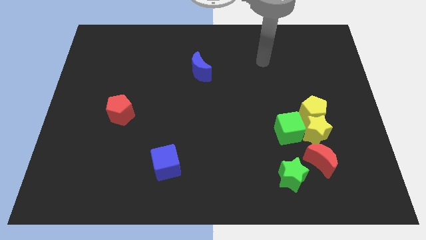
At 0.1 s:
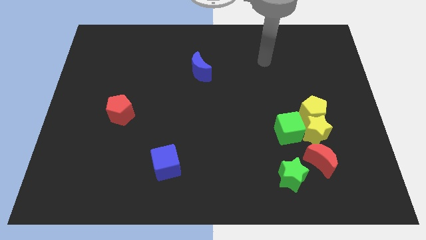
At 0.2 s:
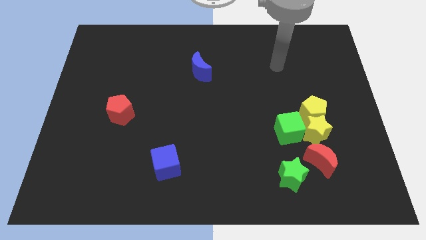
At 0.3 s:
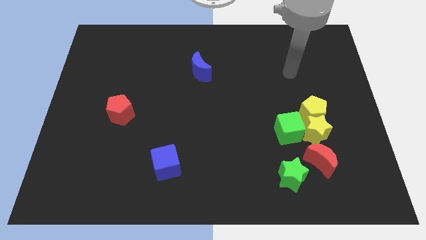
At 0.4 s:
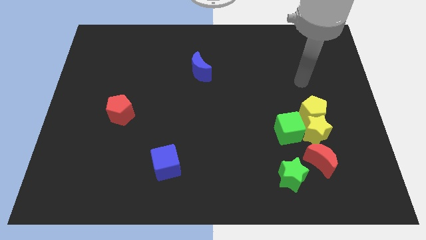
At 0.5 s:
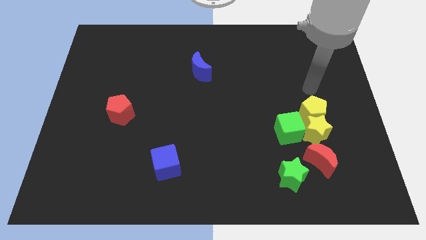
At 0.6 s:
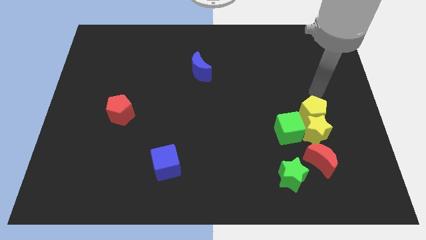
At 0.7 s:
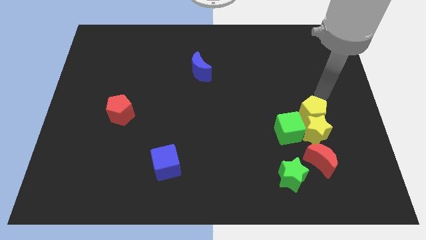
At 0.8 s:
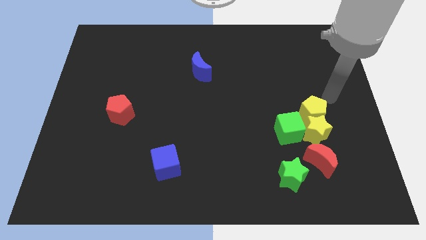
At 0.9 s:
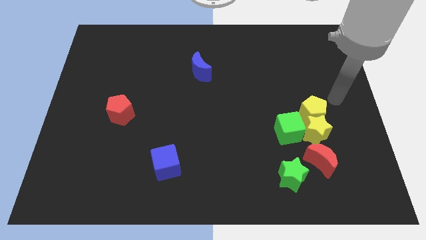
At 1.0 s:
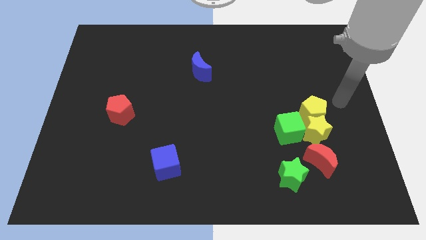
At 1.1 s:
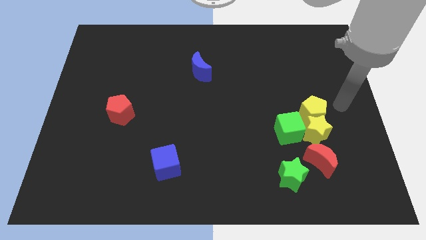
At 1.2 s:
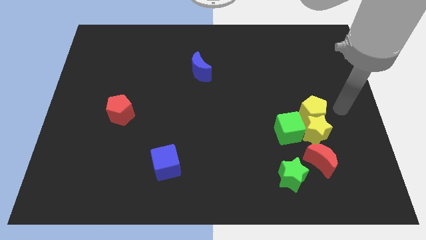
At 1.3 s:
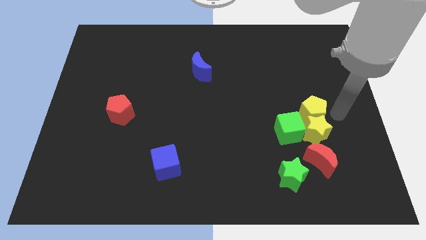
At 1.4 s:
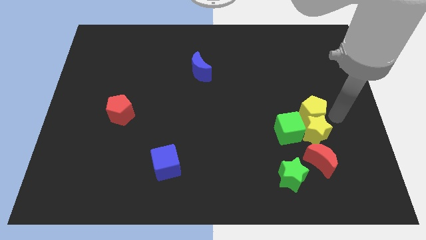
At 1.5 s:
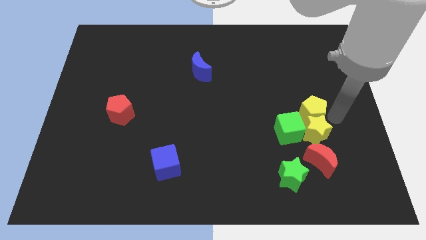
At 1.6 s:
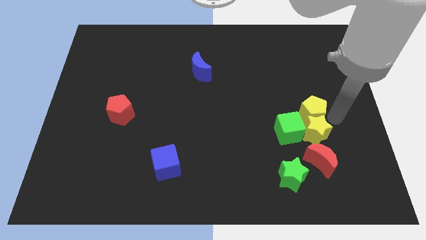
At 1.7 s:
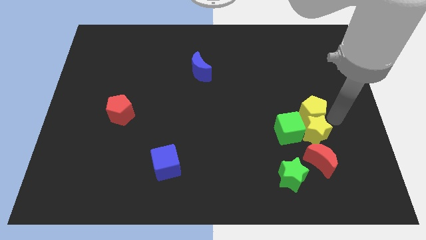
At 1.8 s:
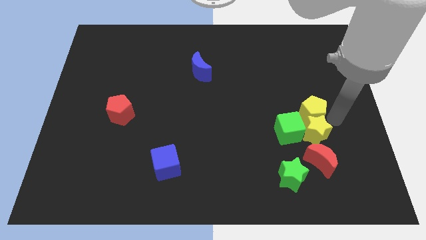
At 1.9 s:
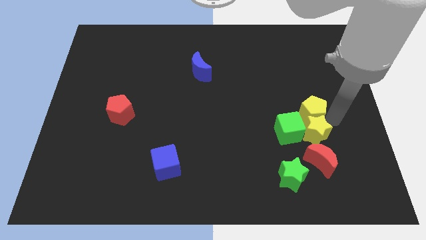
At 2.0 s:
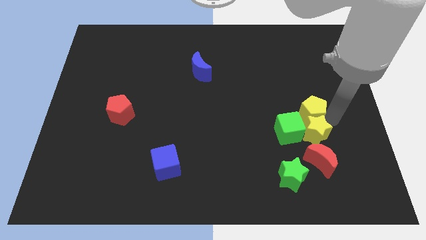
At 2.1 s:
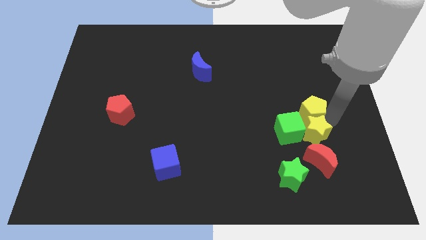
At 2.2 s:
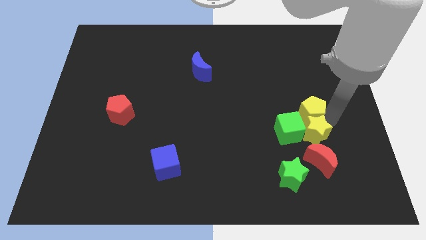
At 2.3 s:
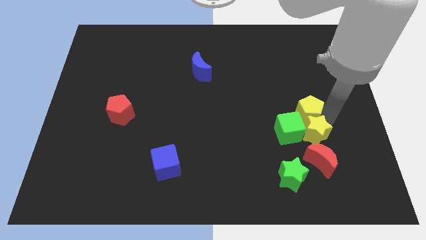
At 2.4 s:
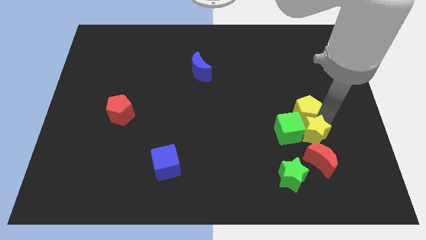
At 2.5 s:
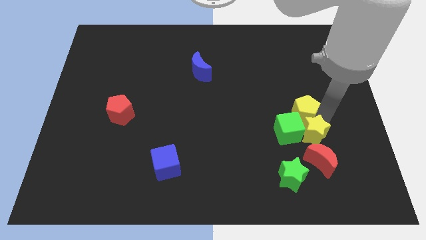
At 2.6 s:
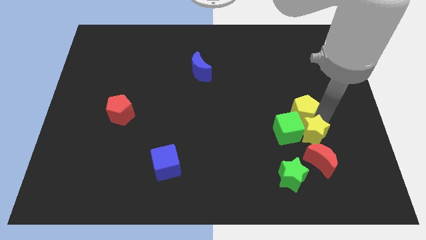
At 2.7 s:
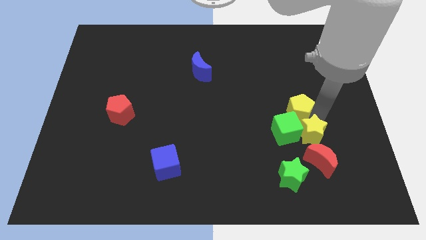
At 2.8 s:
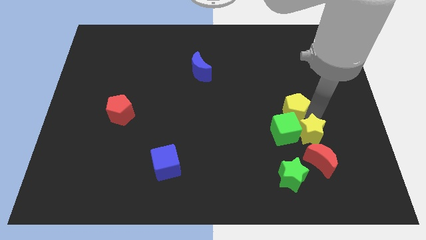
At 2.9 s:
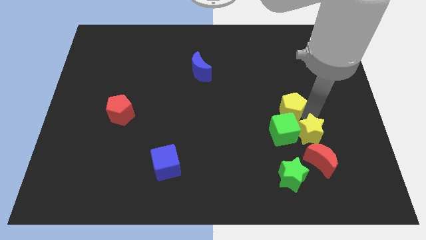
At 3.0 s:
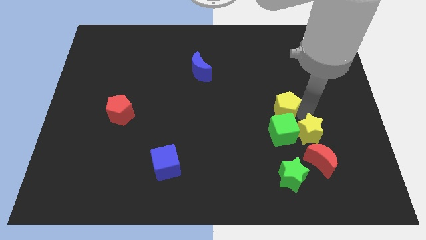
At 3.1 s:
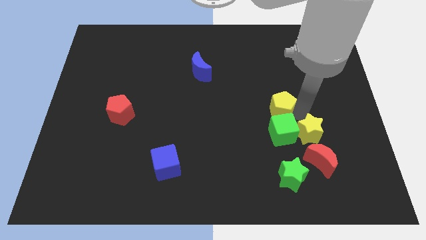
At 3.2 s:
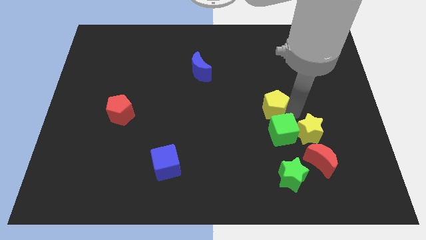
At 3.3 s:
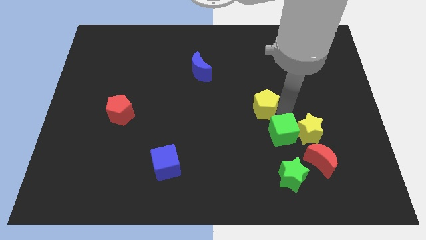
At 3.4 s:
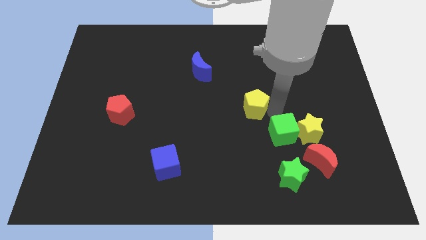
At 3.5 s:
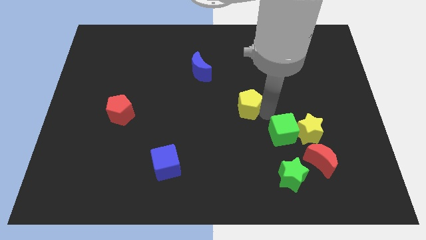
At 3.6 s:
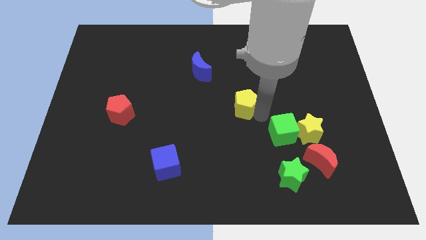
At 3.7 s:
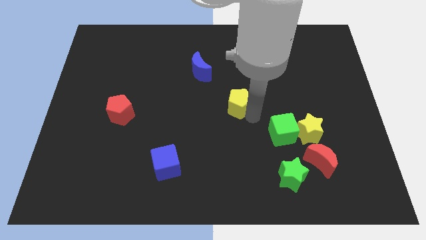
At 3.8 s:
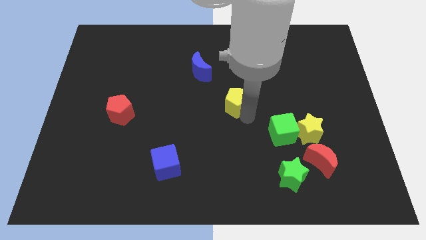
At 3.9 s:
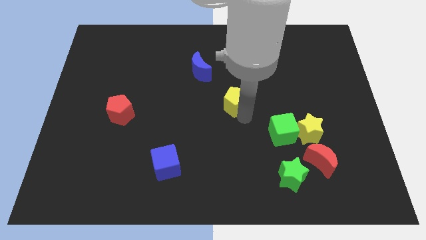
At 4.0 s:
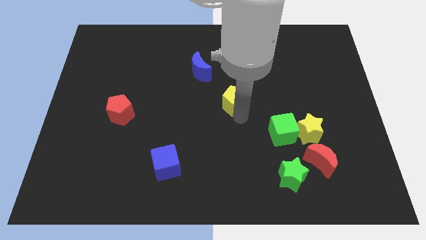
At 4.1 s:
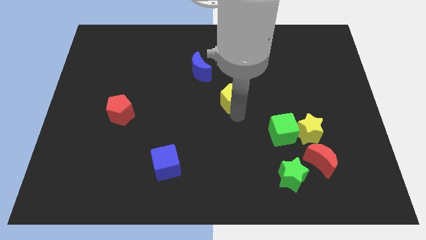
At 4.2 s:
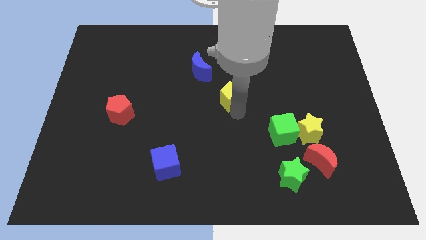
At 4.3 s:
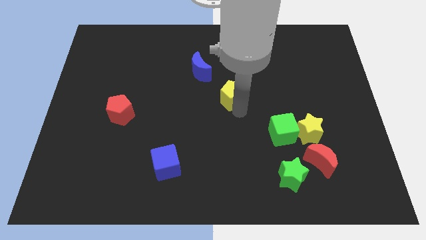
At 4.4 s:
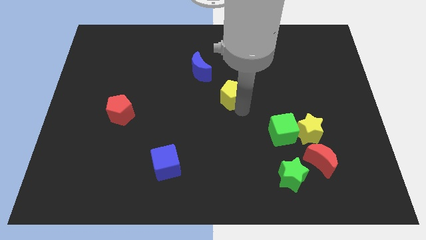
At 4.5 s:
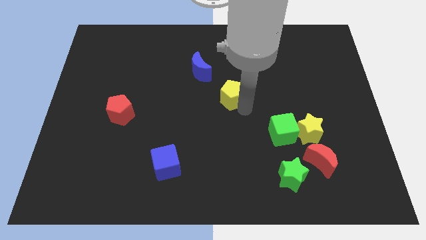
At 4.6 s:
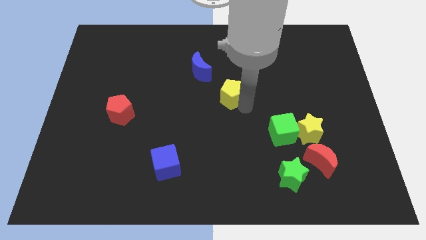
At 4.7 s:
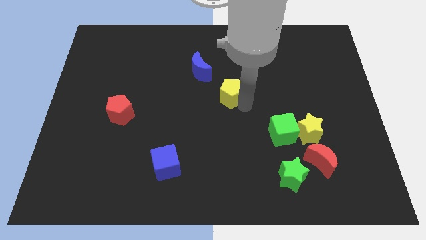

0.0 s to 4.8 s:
seperate the yellow pentagon and yellow star

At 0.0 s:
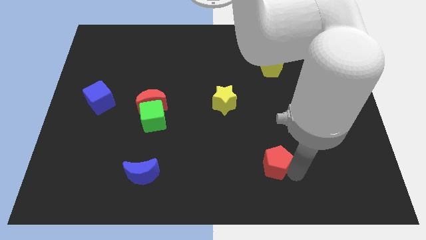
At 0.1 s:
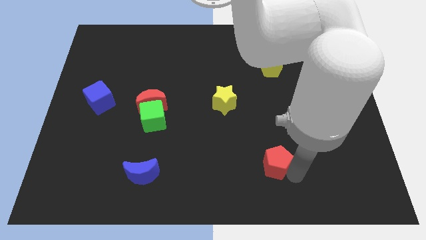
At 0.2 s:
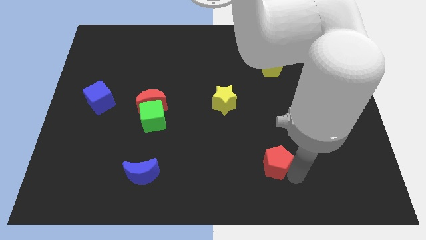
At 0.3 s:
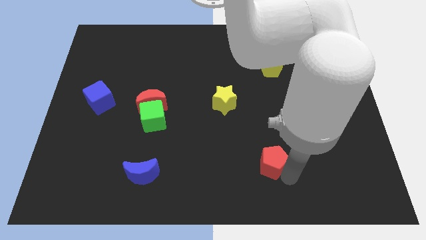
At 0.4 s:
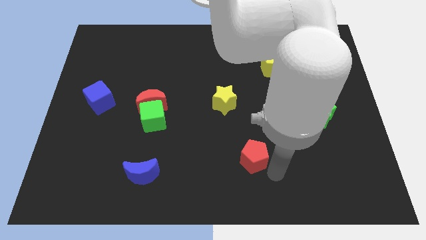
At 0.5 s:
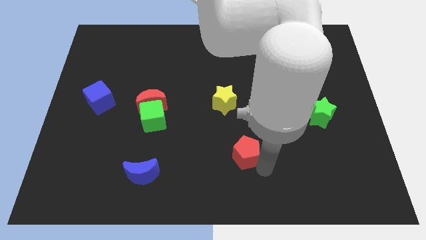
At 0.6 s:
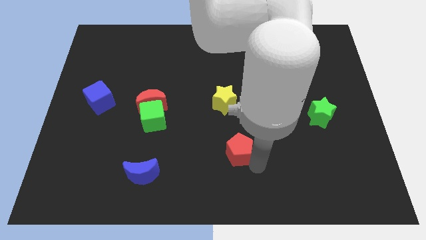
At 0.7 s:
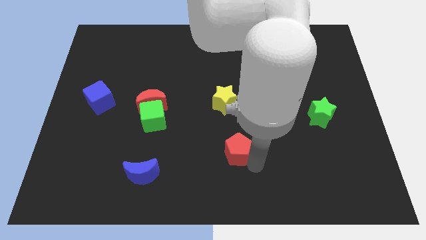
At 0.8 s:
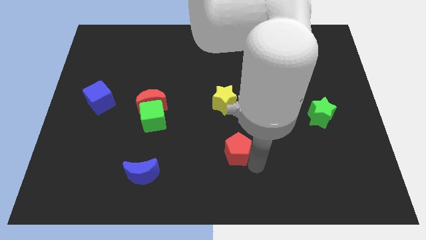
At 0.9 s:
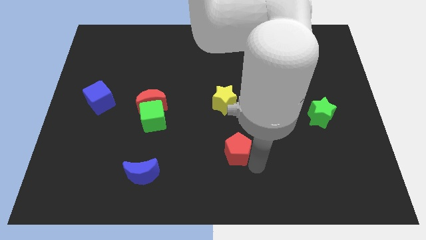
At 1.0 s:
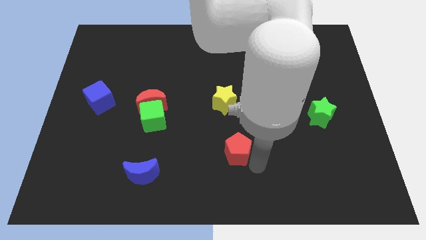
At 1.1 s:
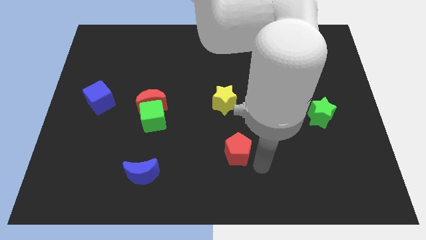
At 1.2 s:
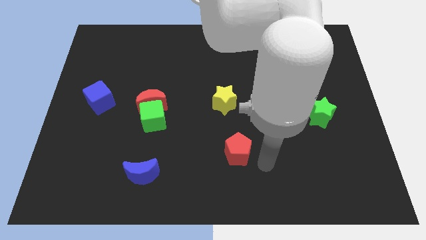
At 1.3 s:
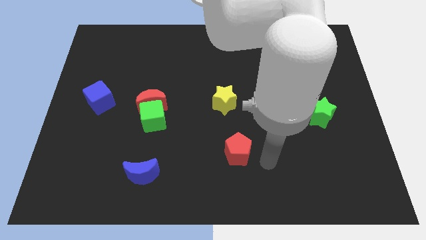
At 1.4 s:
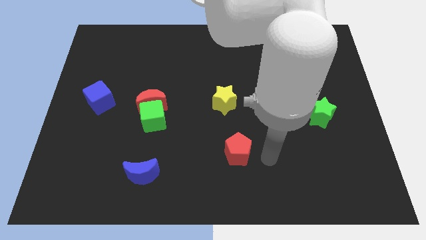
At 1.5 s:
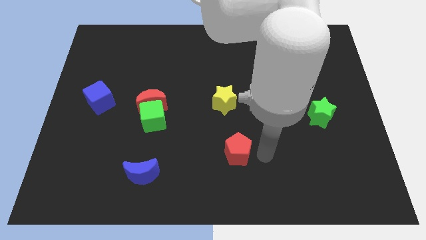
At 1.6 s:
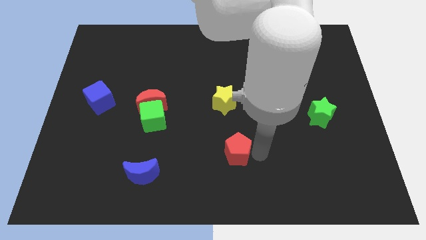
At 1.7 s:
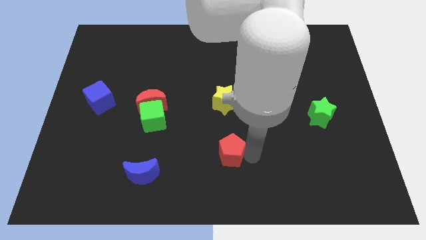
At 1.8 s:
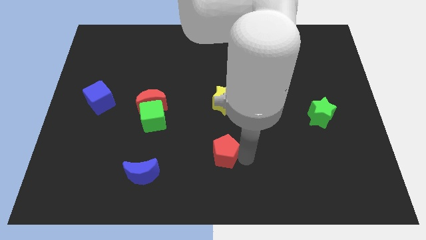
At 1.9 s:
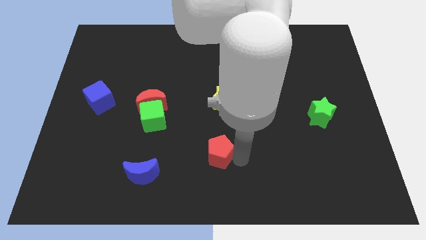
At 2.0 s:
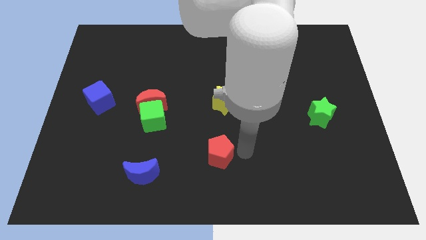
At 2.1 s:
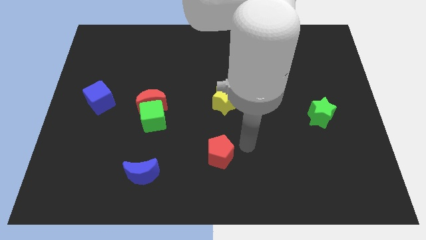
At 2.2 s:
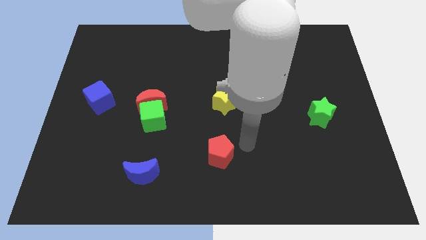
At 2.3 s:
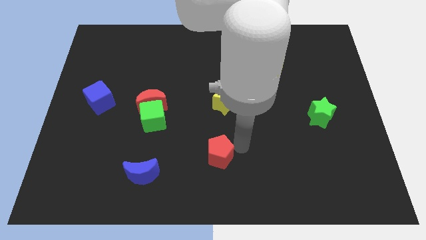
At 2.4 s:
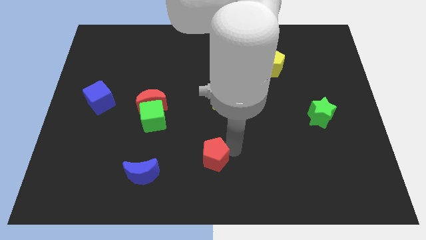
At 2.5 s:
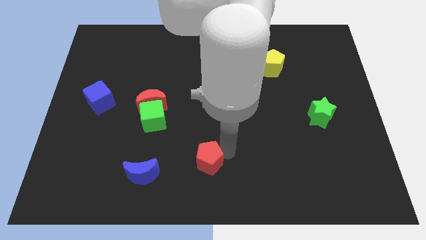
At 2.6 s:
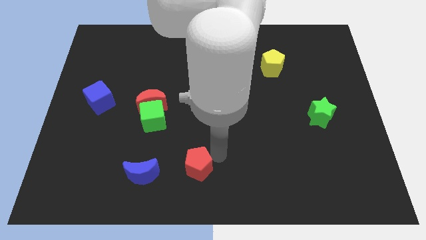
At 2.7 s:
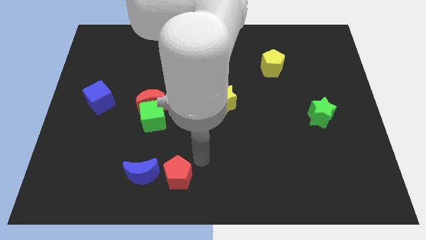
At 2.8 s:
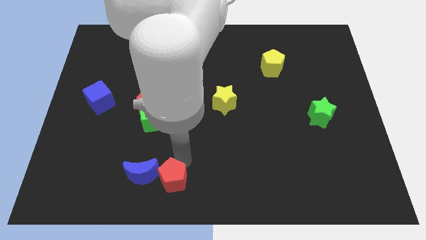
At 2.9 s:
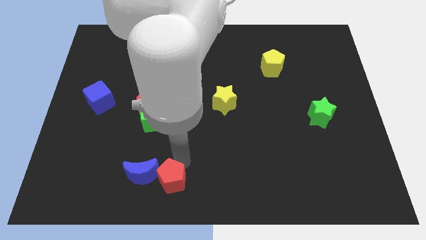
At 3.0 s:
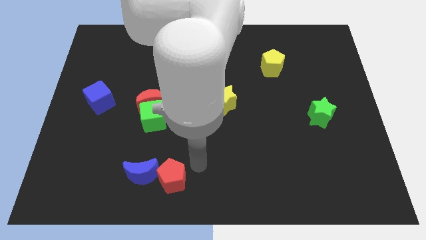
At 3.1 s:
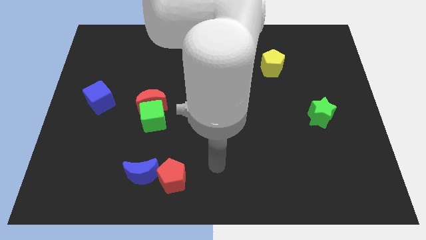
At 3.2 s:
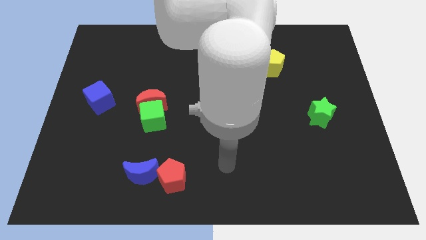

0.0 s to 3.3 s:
place the red pentagon close to the blue moon

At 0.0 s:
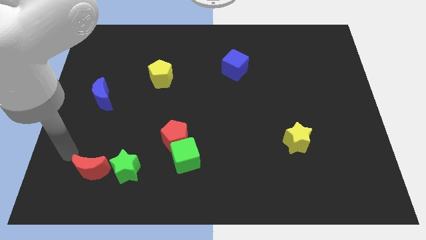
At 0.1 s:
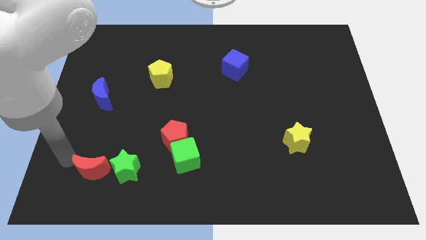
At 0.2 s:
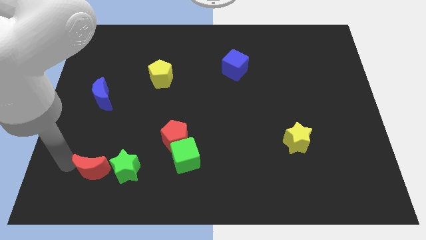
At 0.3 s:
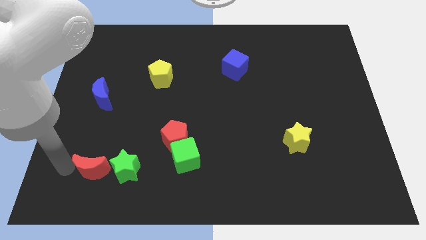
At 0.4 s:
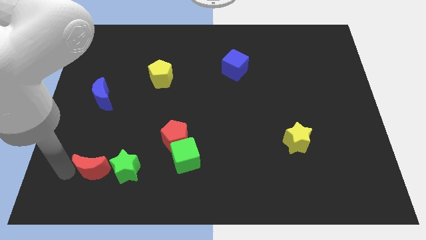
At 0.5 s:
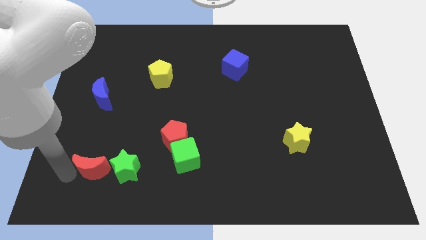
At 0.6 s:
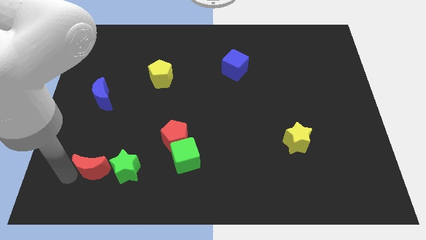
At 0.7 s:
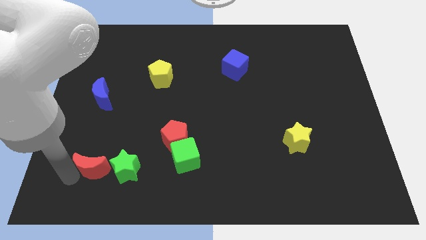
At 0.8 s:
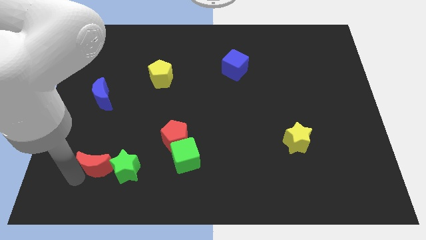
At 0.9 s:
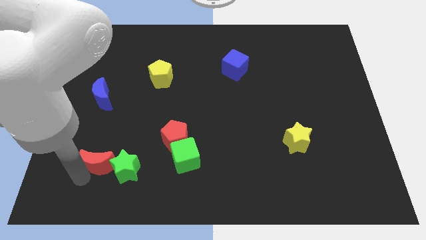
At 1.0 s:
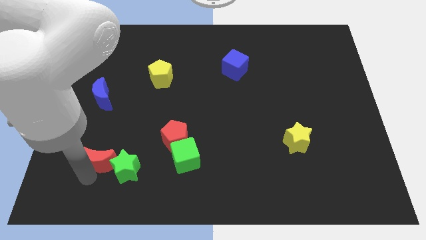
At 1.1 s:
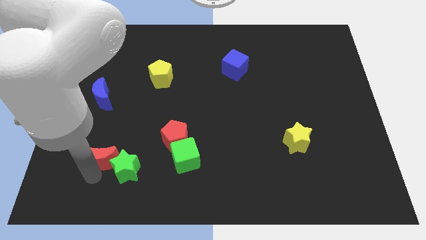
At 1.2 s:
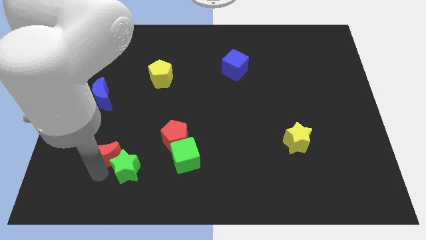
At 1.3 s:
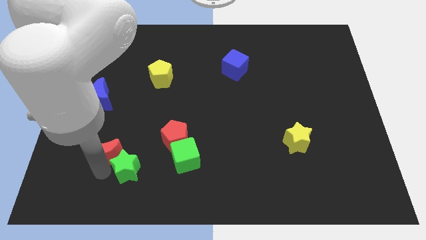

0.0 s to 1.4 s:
slide the red moon to the top of the green star
